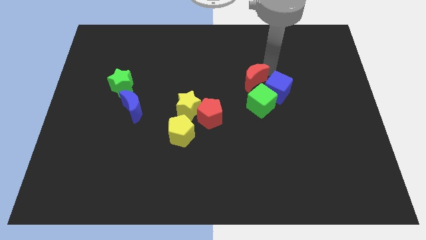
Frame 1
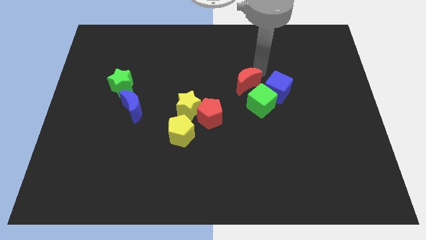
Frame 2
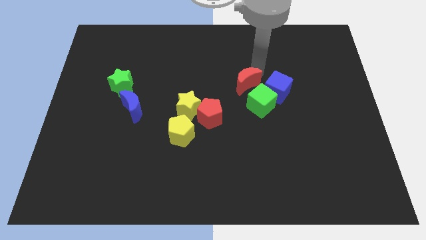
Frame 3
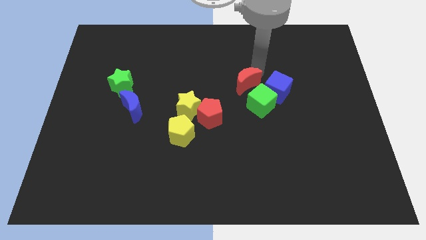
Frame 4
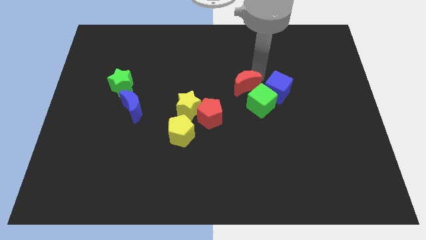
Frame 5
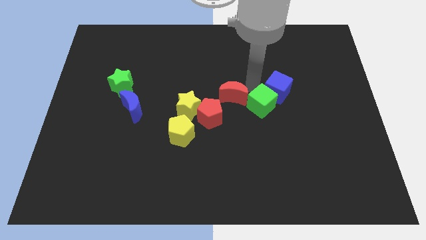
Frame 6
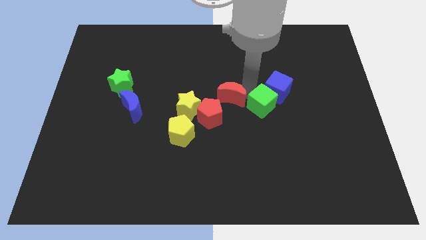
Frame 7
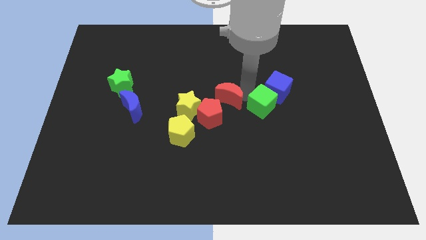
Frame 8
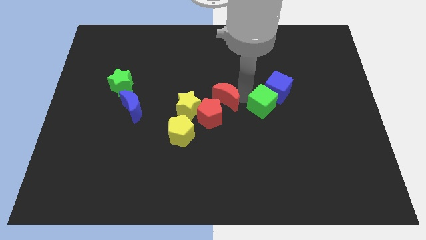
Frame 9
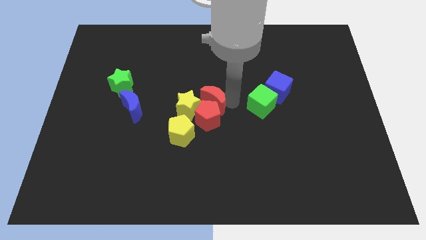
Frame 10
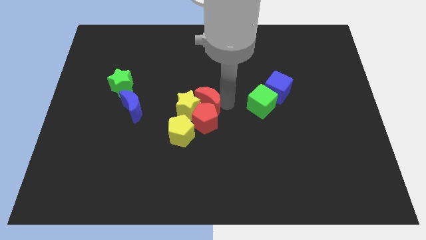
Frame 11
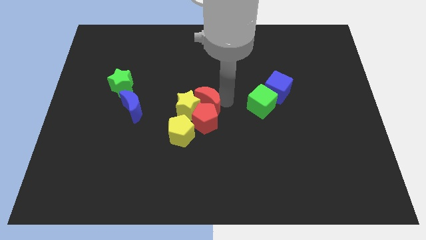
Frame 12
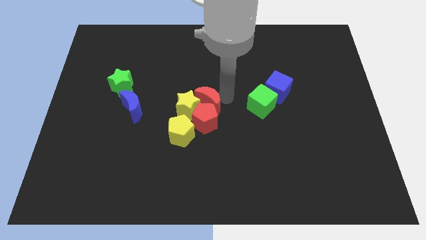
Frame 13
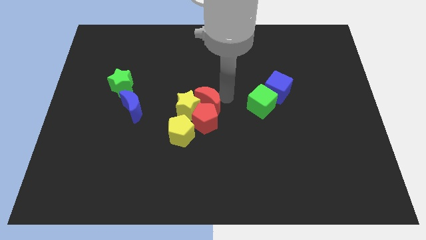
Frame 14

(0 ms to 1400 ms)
push the red moon close to the red pentagon

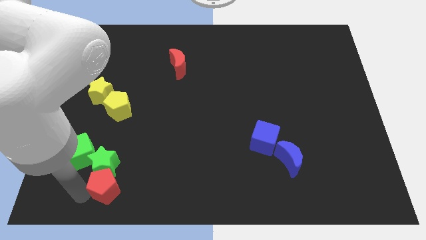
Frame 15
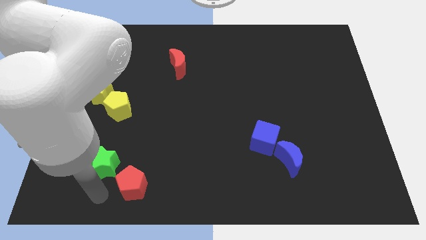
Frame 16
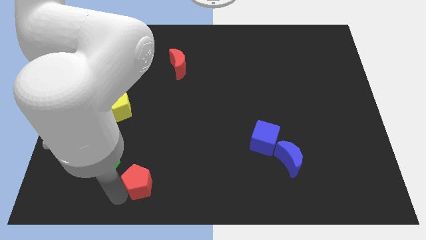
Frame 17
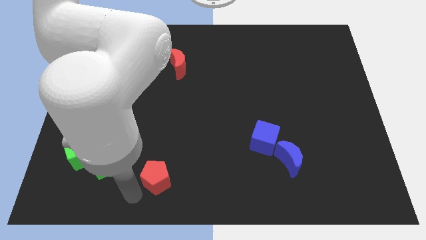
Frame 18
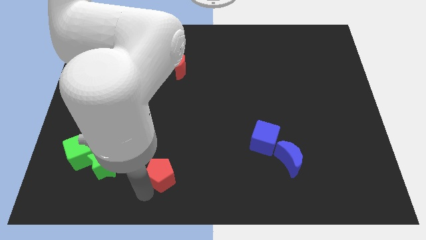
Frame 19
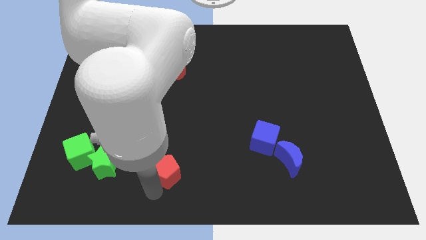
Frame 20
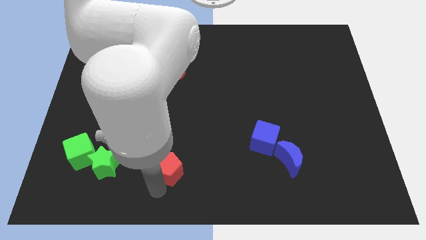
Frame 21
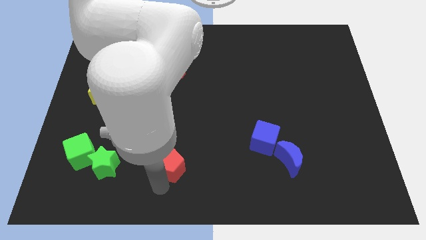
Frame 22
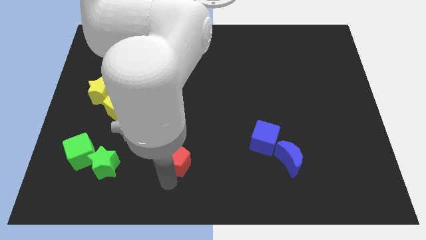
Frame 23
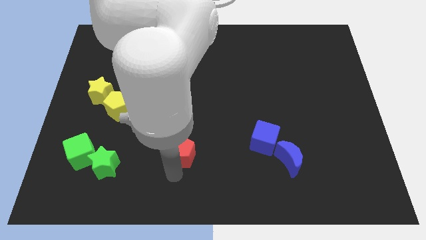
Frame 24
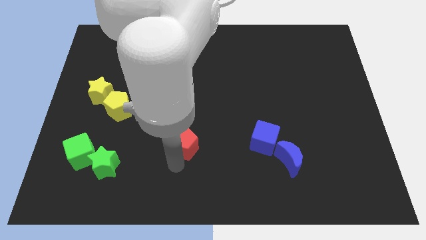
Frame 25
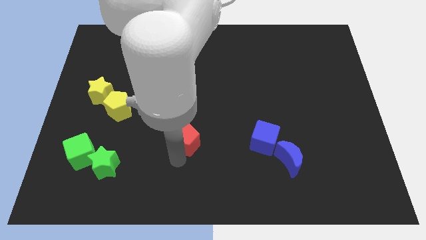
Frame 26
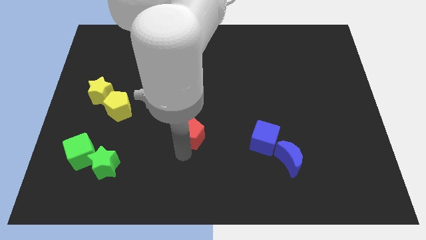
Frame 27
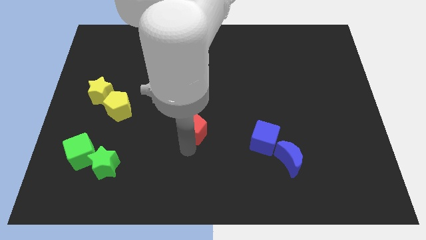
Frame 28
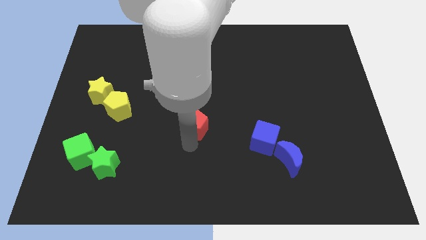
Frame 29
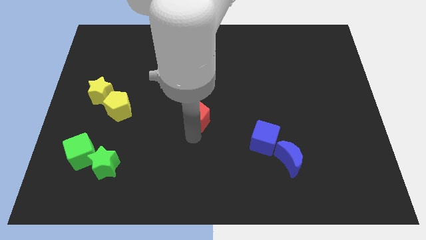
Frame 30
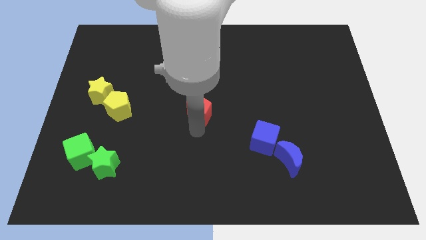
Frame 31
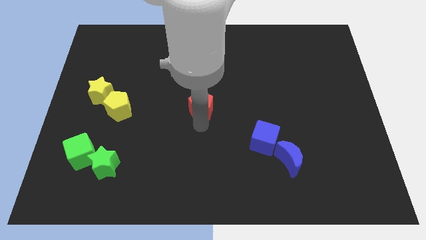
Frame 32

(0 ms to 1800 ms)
move the red pentagon to the center of the table

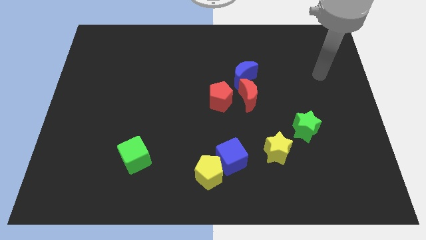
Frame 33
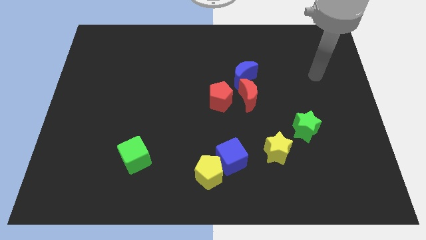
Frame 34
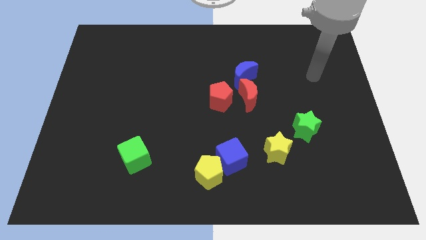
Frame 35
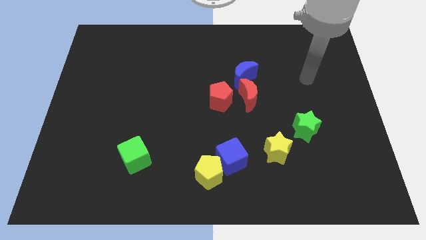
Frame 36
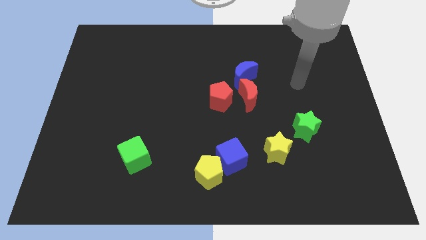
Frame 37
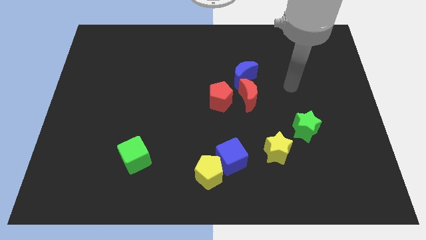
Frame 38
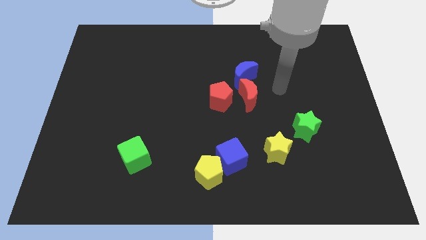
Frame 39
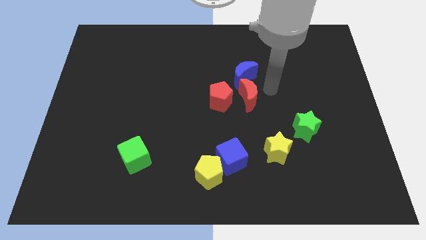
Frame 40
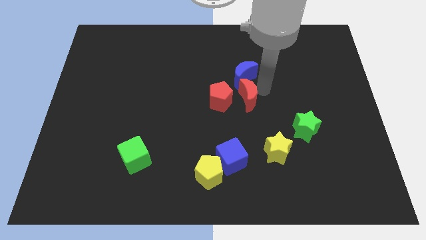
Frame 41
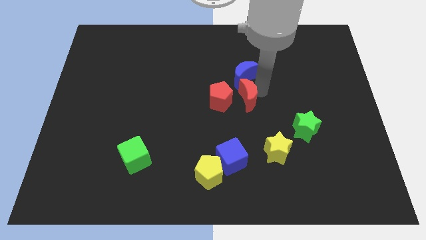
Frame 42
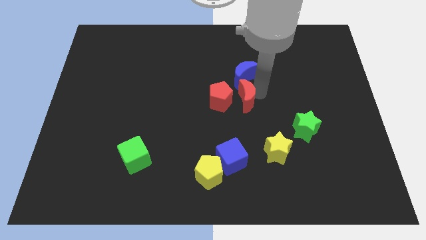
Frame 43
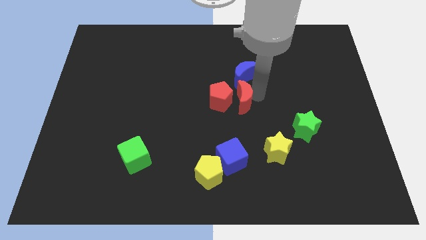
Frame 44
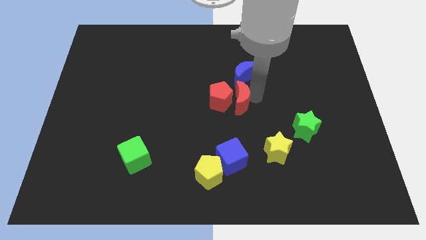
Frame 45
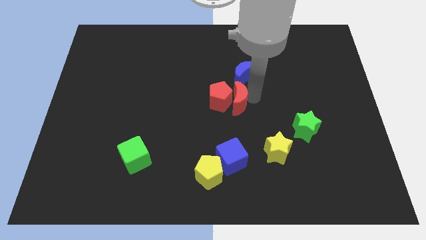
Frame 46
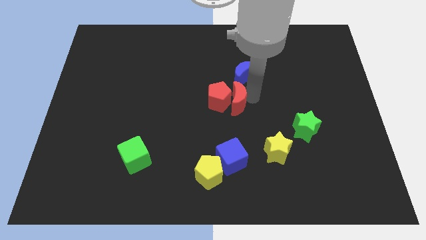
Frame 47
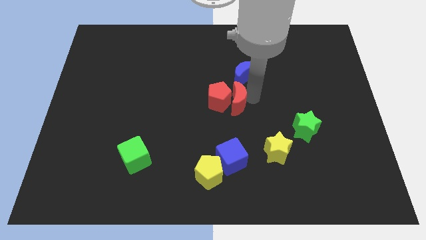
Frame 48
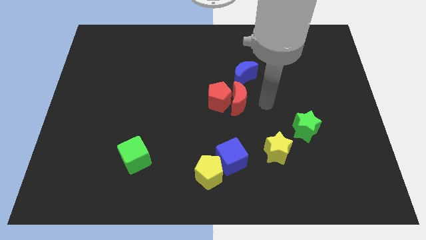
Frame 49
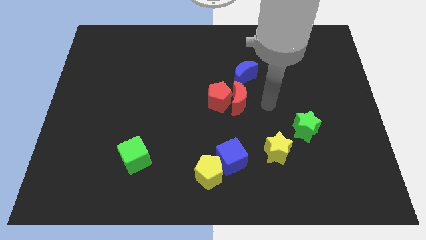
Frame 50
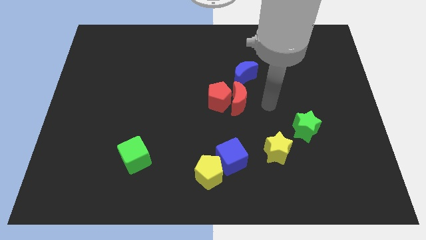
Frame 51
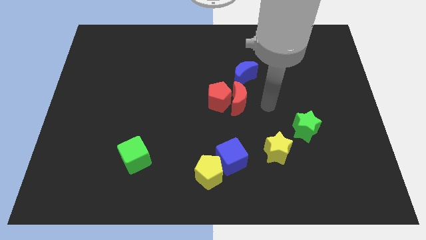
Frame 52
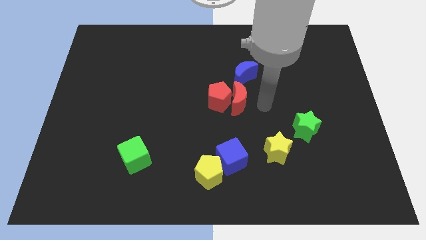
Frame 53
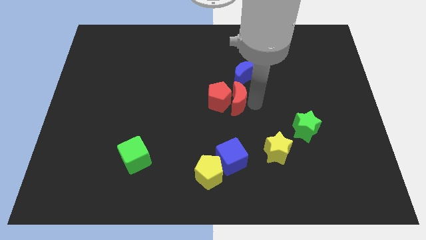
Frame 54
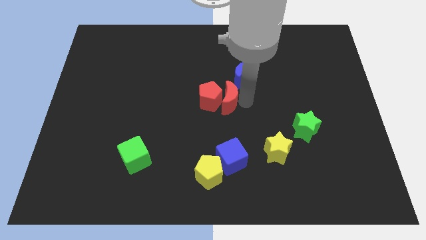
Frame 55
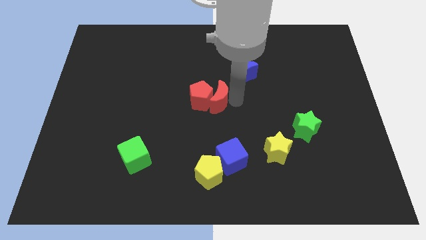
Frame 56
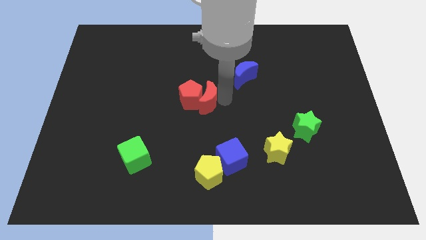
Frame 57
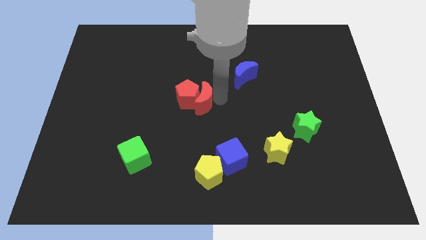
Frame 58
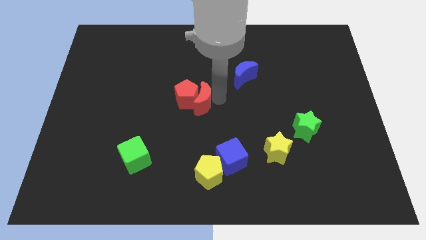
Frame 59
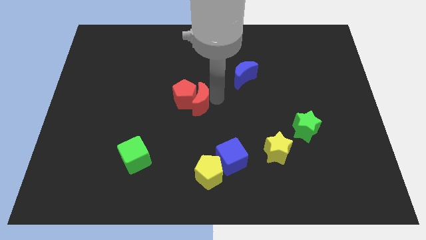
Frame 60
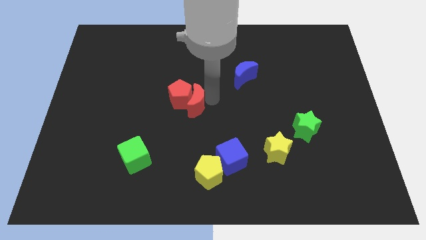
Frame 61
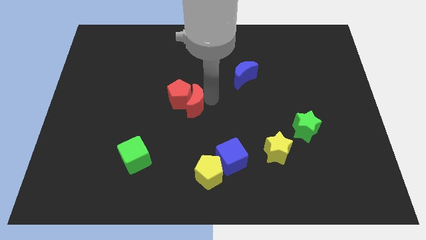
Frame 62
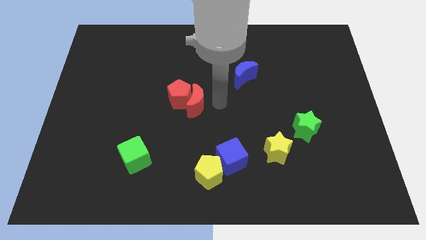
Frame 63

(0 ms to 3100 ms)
push the red moon into the red pentagon

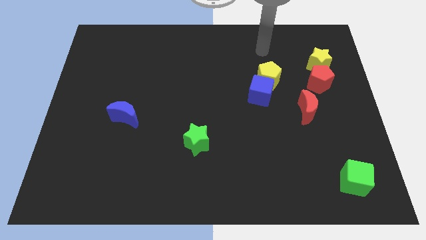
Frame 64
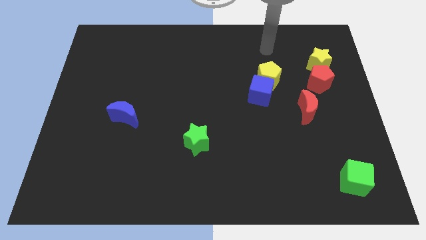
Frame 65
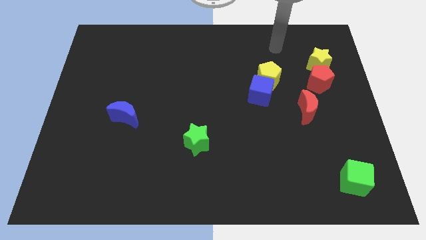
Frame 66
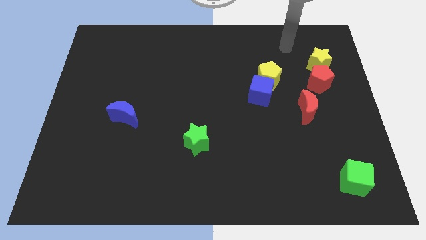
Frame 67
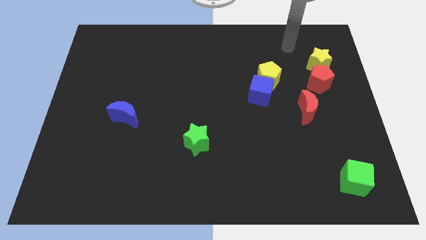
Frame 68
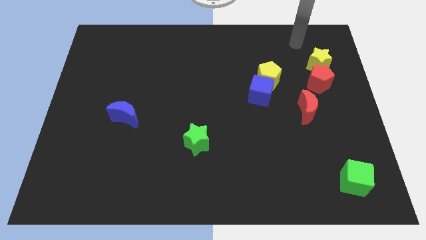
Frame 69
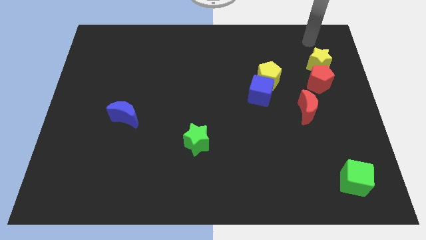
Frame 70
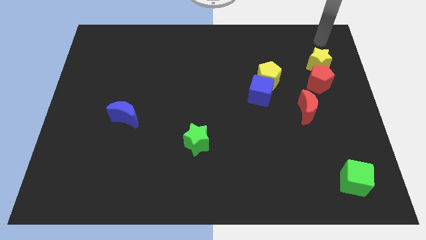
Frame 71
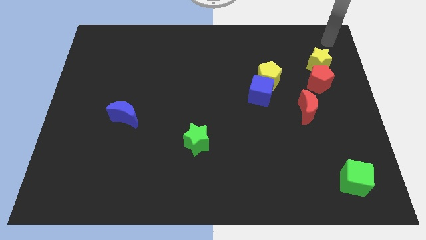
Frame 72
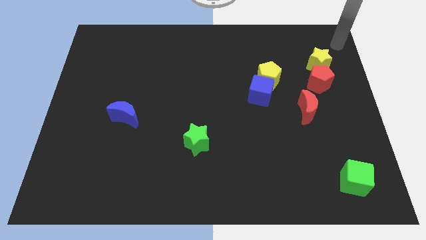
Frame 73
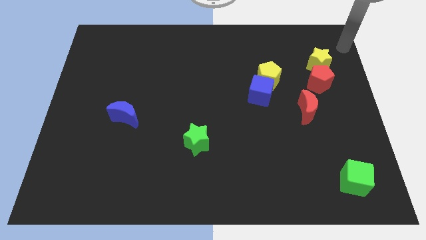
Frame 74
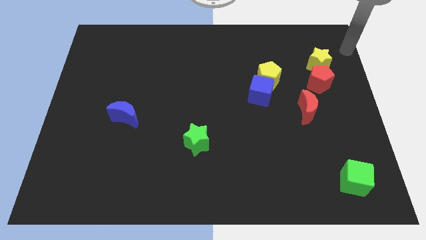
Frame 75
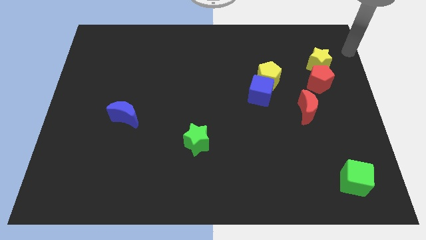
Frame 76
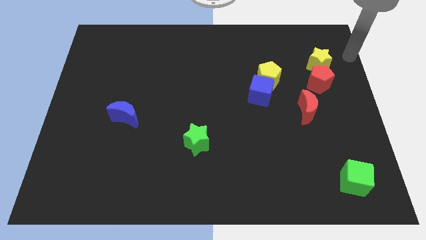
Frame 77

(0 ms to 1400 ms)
place your arm at the right of the yellow star

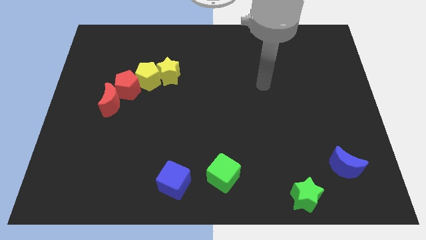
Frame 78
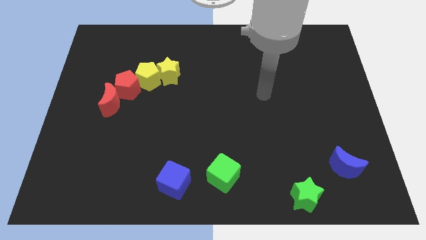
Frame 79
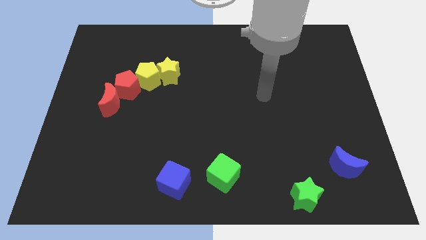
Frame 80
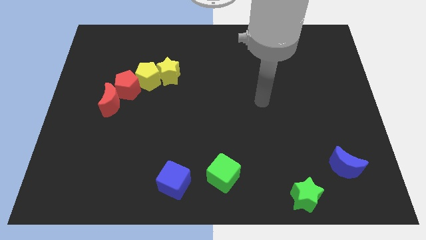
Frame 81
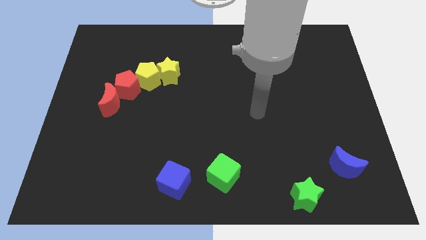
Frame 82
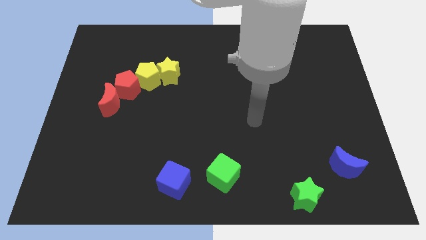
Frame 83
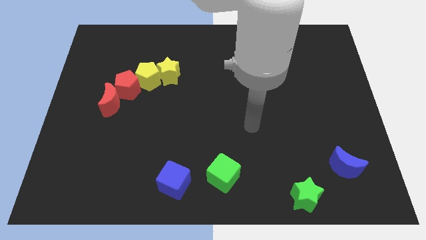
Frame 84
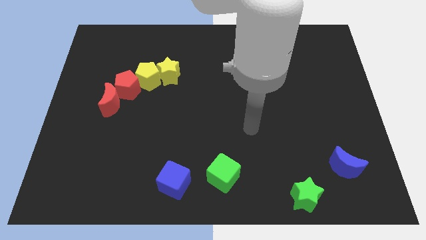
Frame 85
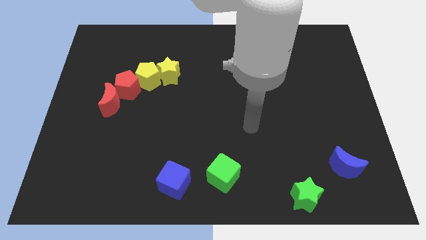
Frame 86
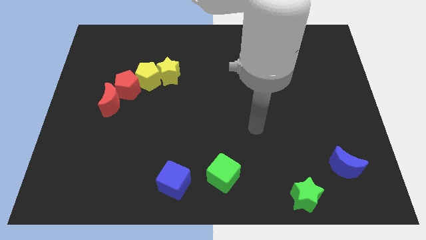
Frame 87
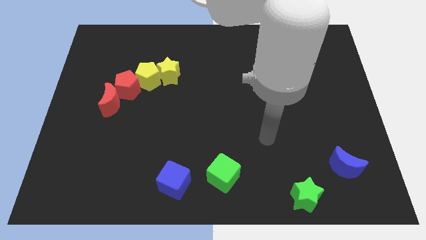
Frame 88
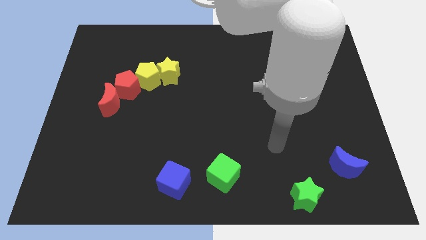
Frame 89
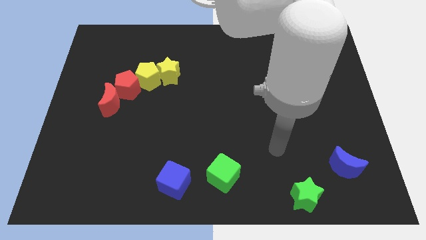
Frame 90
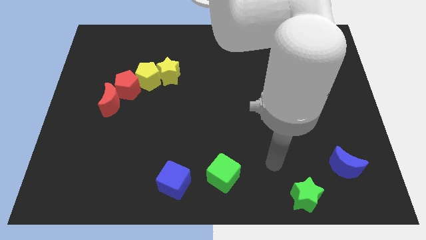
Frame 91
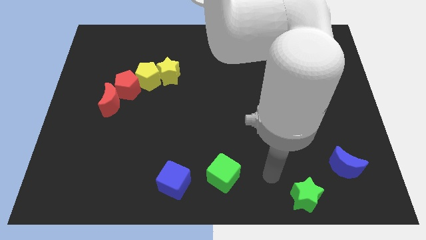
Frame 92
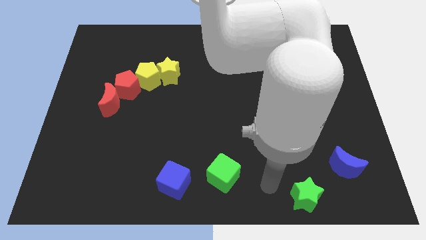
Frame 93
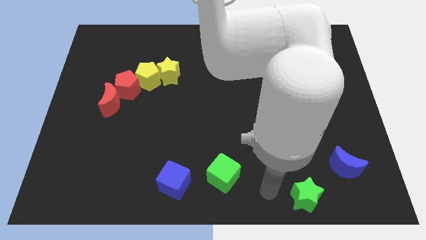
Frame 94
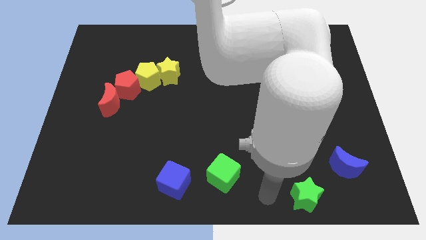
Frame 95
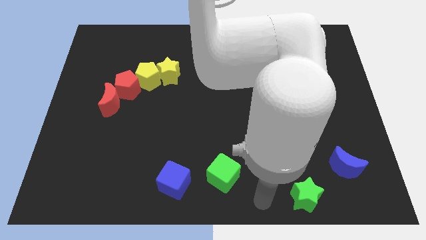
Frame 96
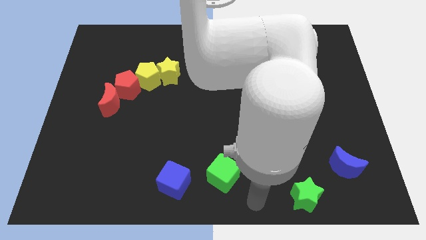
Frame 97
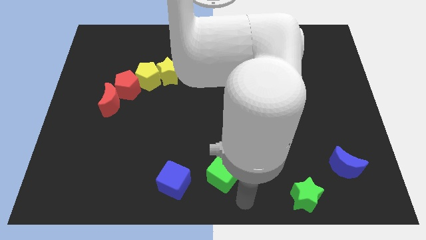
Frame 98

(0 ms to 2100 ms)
point the arm at the bottom of the green cube
